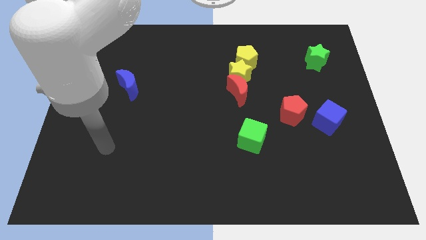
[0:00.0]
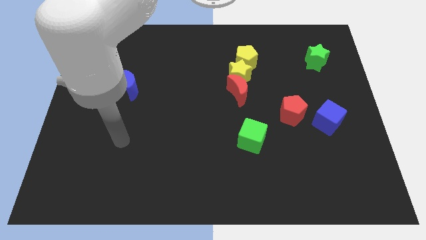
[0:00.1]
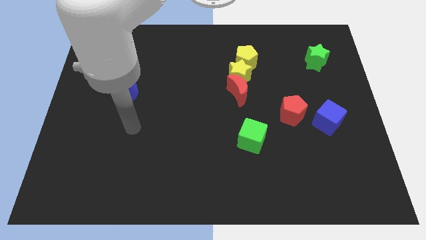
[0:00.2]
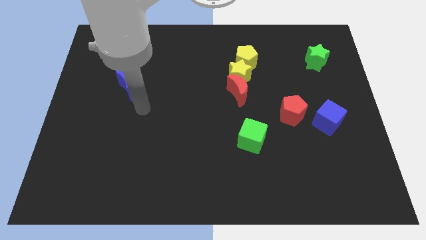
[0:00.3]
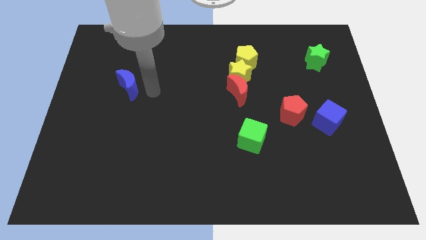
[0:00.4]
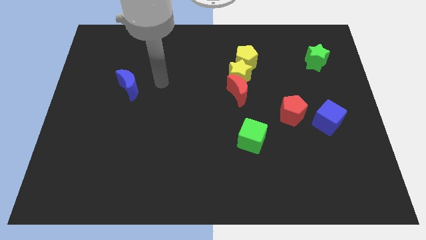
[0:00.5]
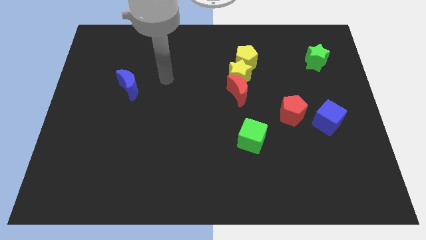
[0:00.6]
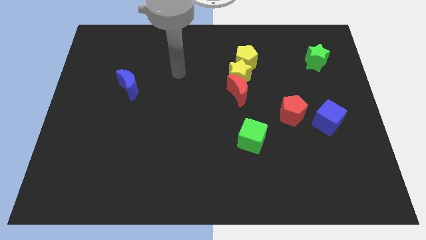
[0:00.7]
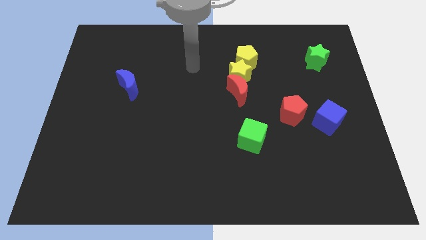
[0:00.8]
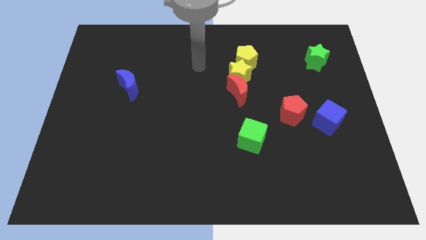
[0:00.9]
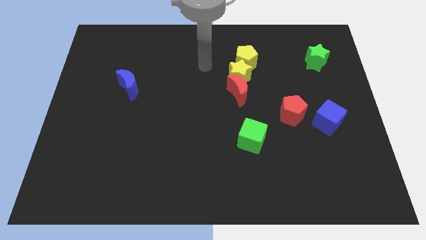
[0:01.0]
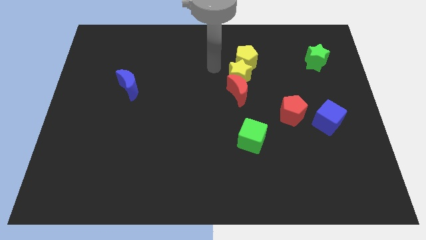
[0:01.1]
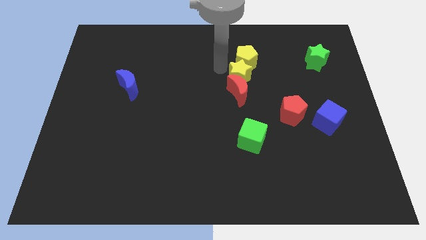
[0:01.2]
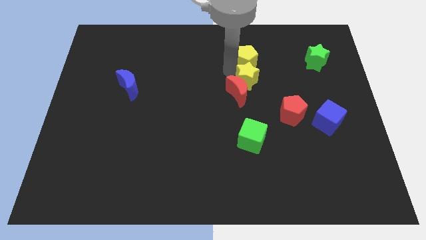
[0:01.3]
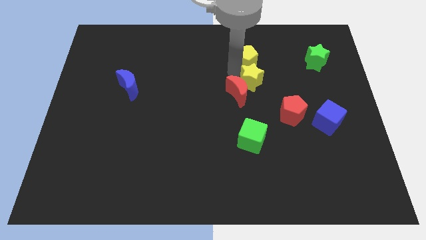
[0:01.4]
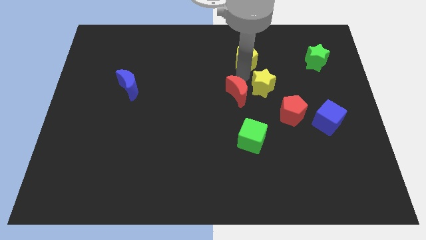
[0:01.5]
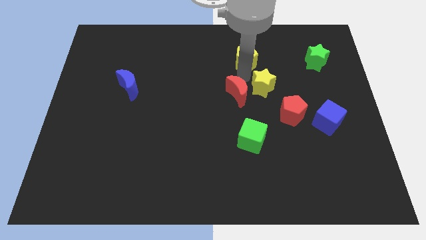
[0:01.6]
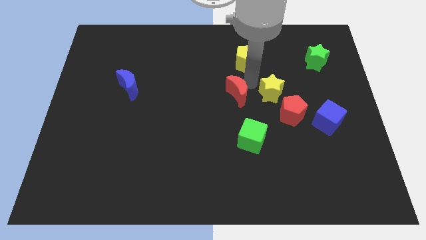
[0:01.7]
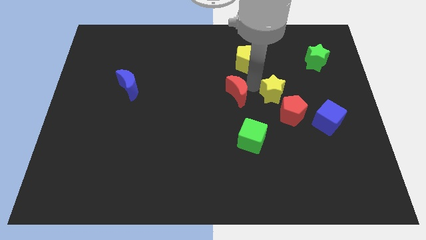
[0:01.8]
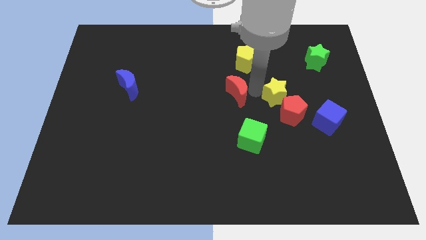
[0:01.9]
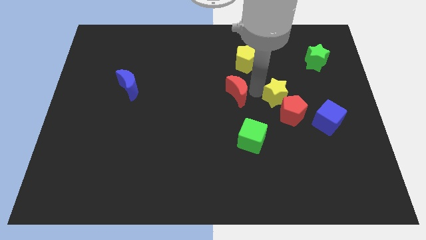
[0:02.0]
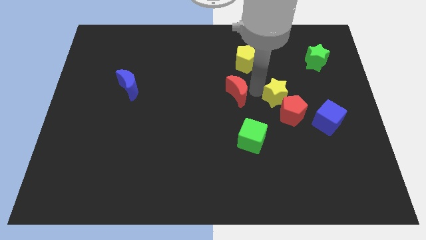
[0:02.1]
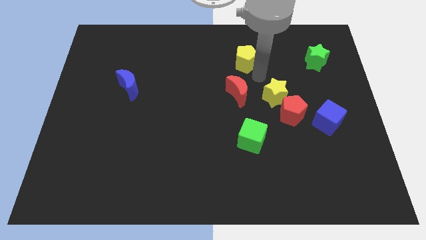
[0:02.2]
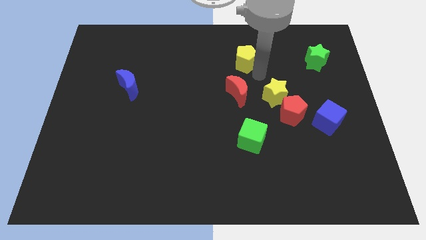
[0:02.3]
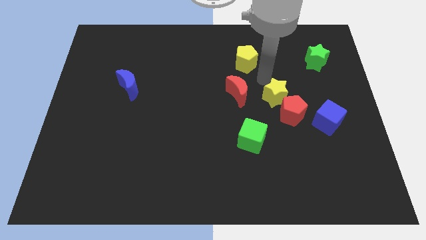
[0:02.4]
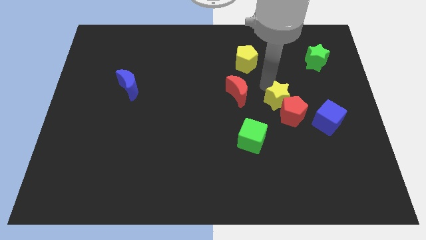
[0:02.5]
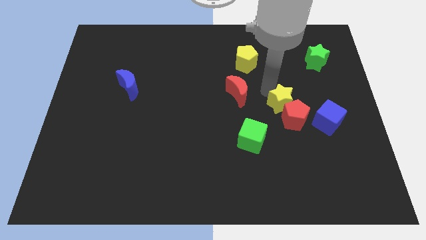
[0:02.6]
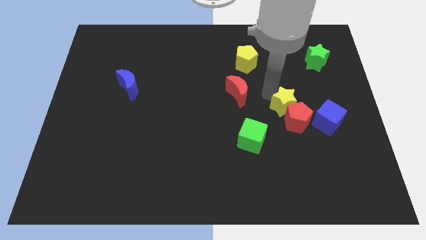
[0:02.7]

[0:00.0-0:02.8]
put the yellow star to the red pentagon

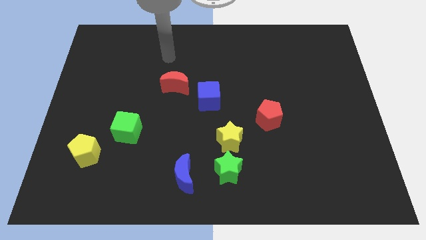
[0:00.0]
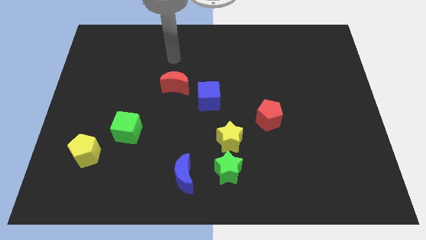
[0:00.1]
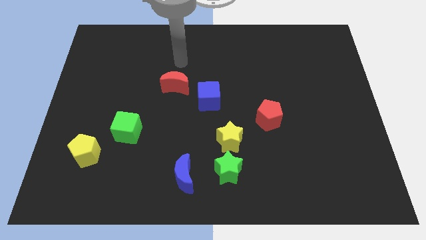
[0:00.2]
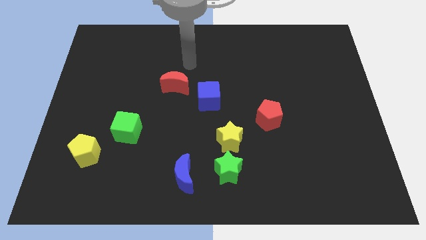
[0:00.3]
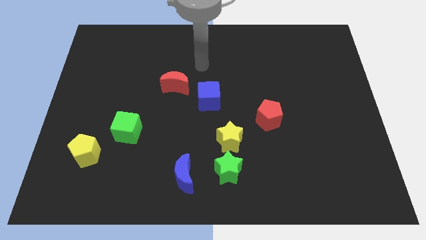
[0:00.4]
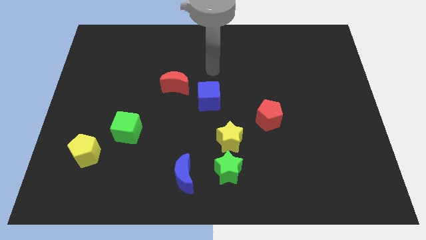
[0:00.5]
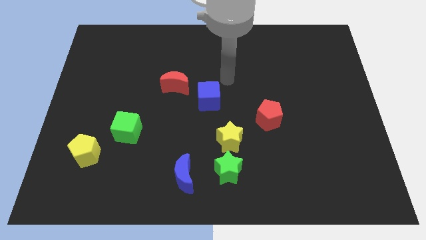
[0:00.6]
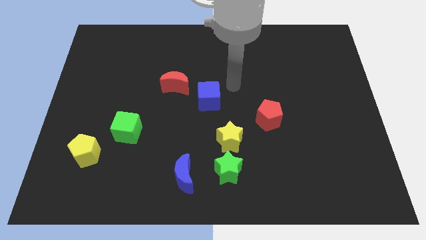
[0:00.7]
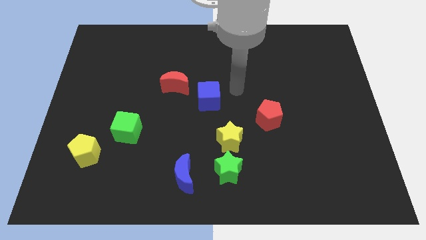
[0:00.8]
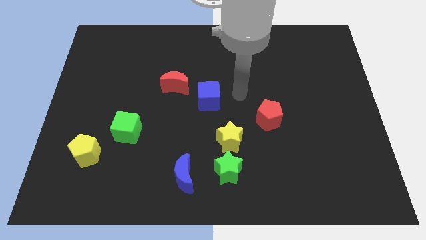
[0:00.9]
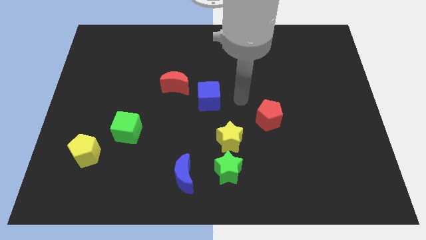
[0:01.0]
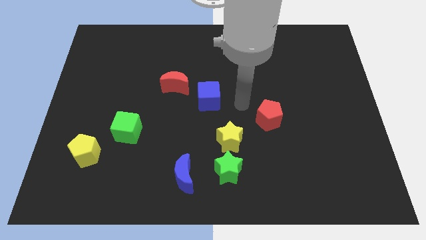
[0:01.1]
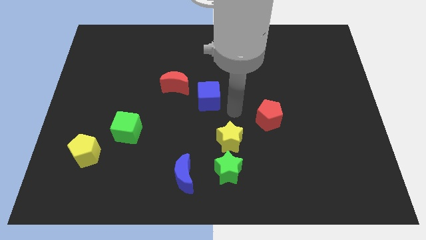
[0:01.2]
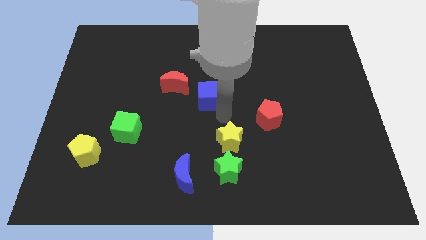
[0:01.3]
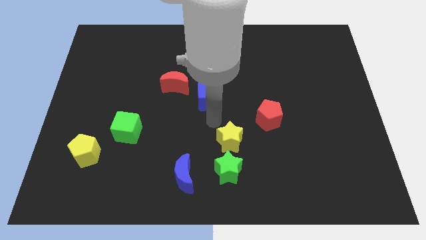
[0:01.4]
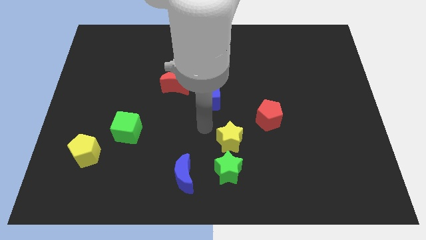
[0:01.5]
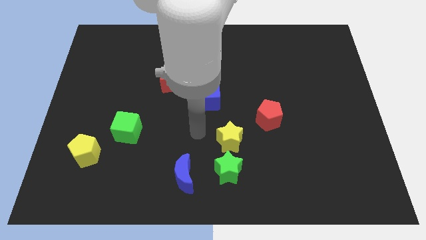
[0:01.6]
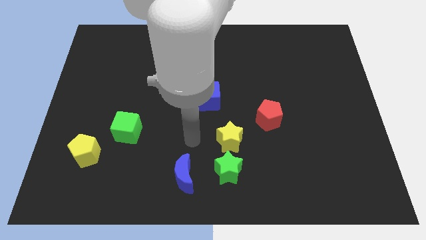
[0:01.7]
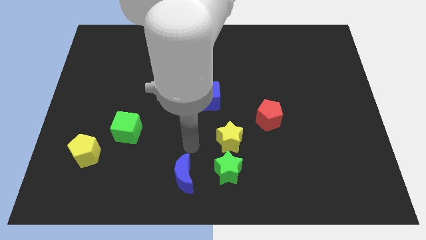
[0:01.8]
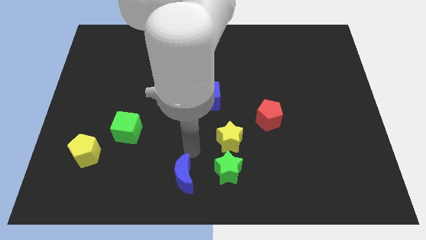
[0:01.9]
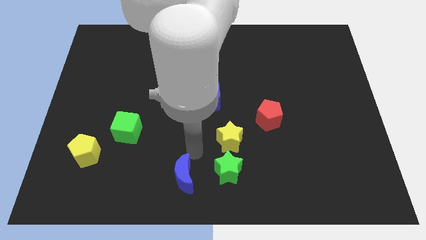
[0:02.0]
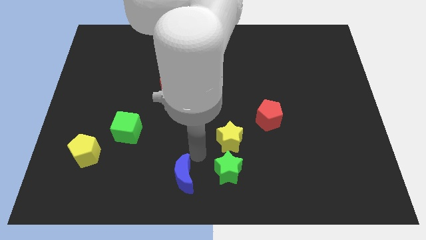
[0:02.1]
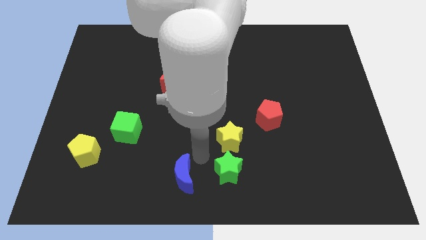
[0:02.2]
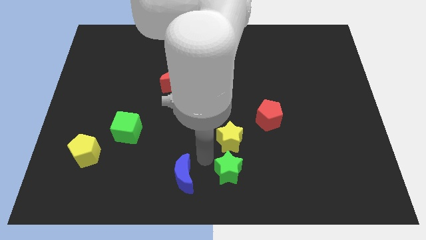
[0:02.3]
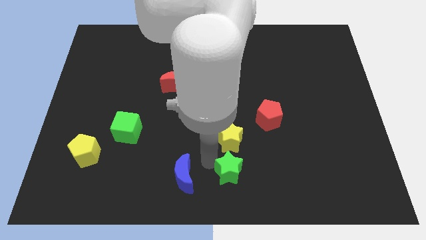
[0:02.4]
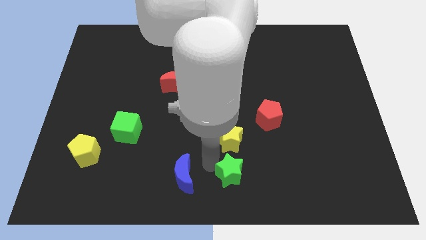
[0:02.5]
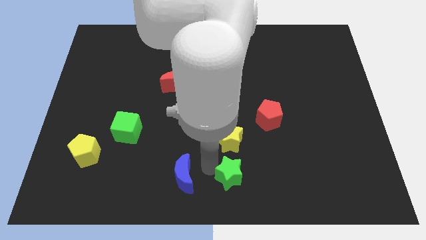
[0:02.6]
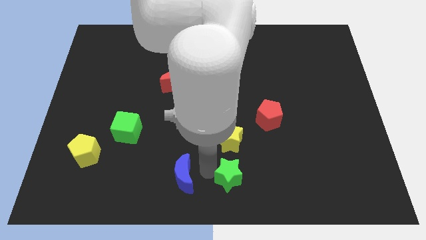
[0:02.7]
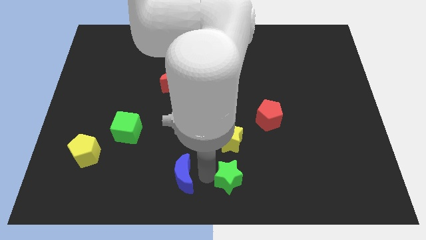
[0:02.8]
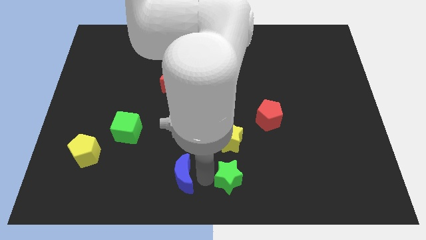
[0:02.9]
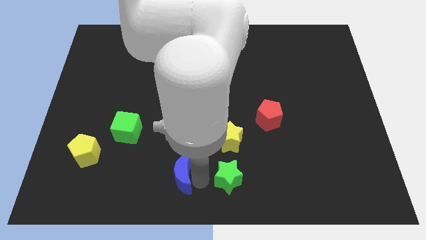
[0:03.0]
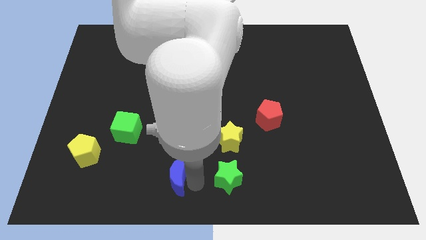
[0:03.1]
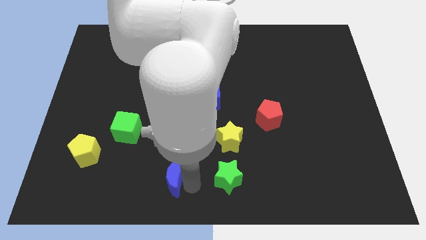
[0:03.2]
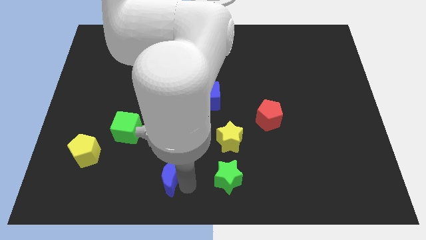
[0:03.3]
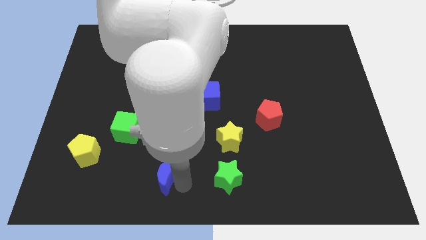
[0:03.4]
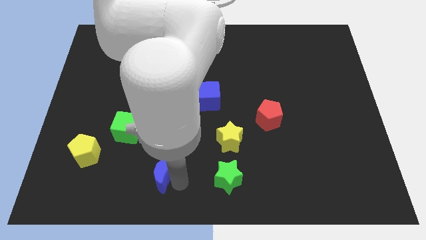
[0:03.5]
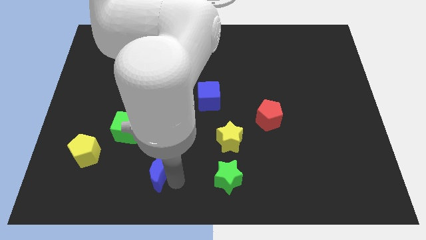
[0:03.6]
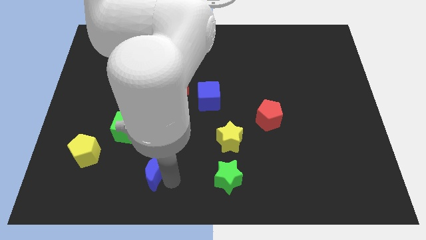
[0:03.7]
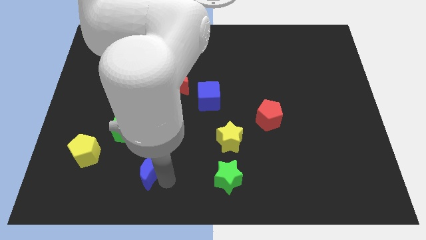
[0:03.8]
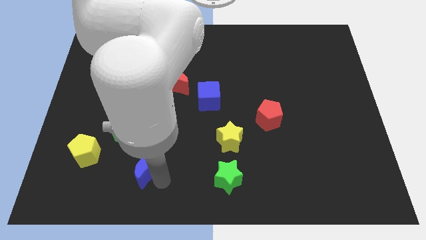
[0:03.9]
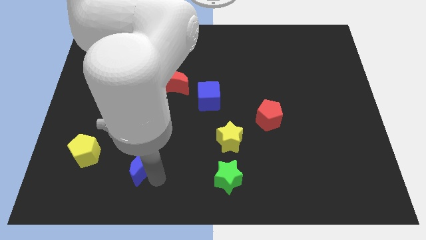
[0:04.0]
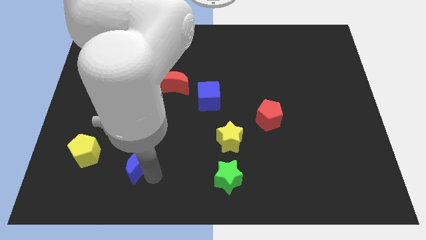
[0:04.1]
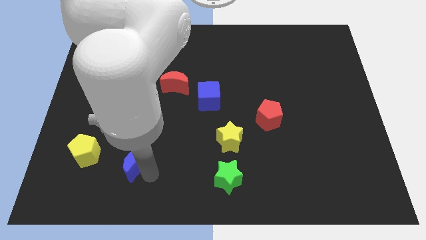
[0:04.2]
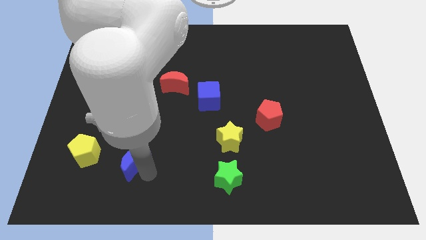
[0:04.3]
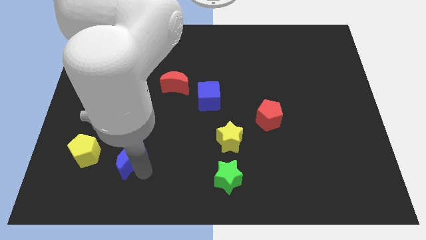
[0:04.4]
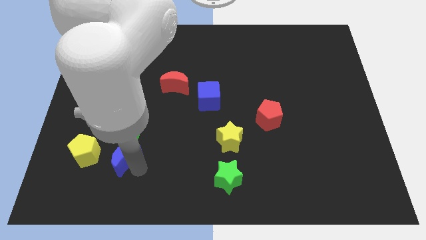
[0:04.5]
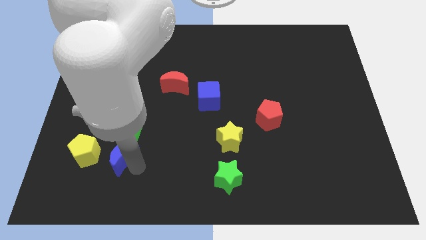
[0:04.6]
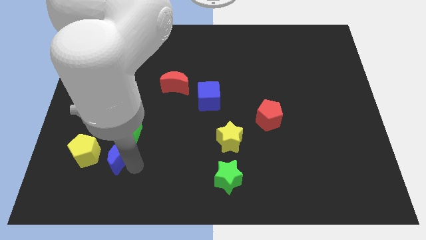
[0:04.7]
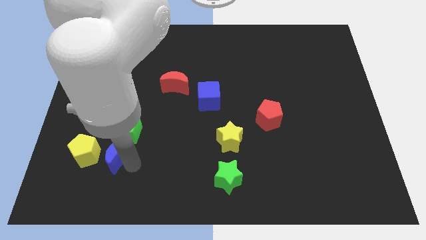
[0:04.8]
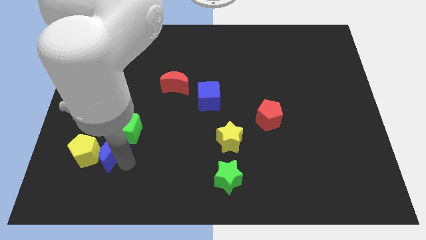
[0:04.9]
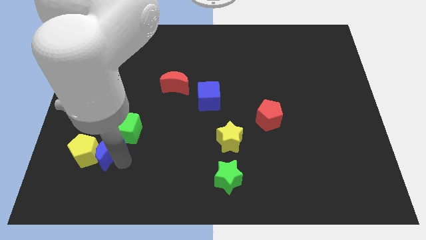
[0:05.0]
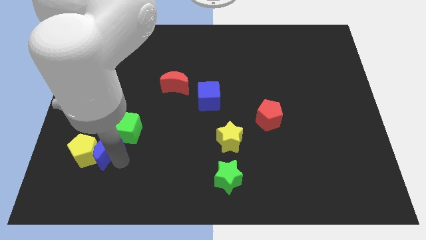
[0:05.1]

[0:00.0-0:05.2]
move the blue moon to the yellow pentagon

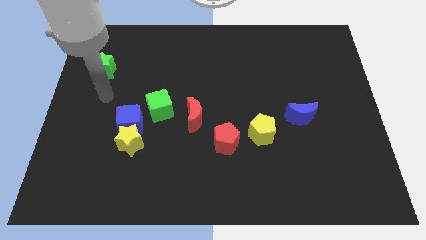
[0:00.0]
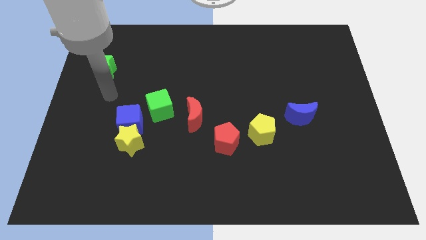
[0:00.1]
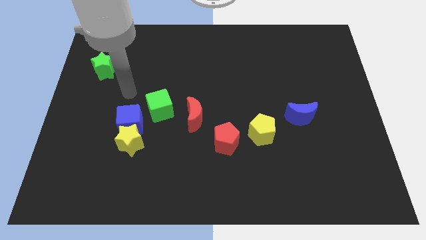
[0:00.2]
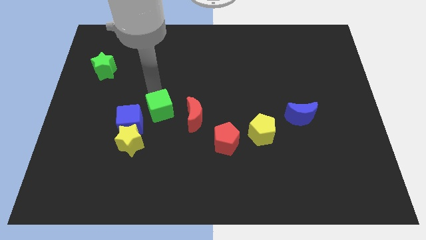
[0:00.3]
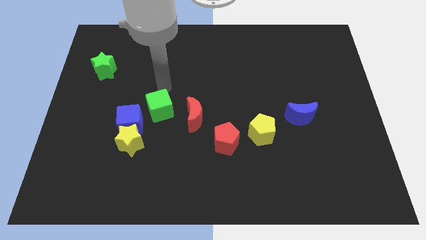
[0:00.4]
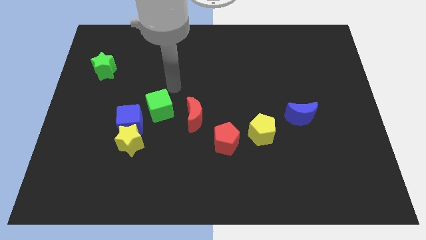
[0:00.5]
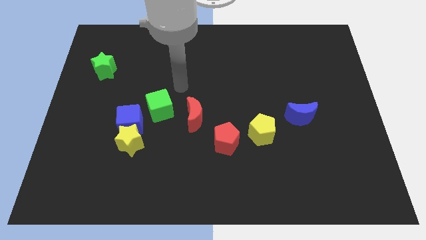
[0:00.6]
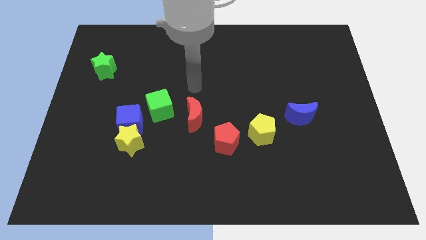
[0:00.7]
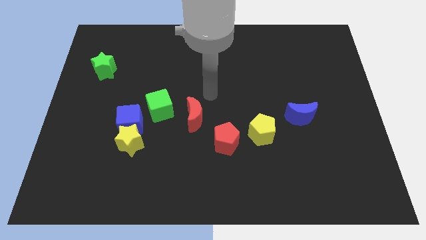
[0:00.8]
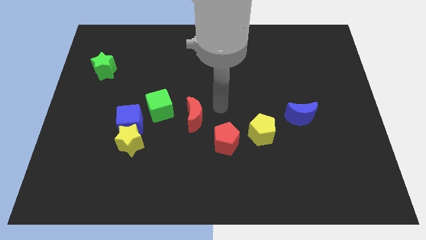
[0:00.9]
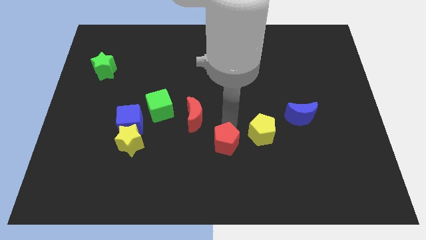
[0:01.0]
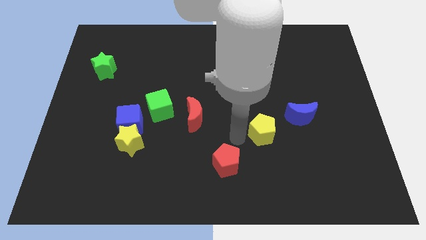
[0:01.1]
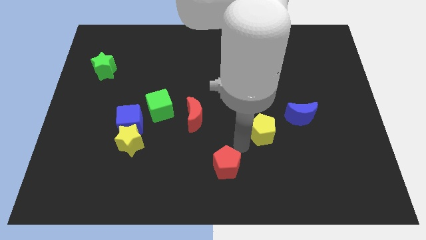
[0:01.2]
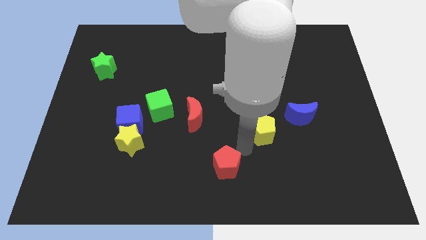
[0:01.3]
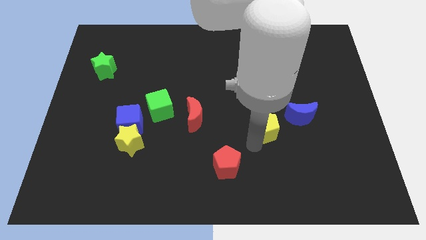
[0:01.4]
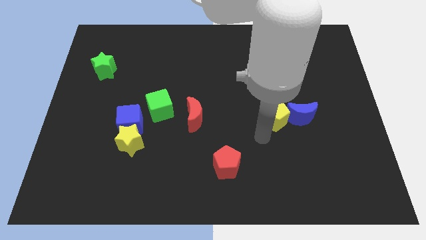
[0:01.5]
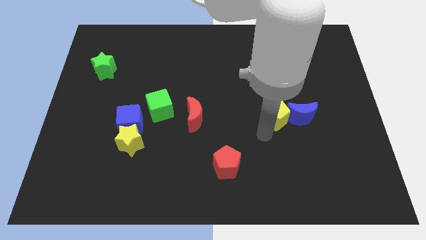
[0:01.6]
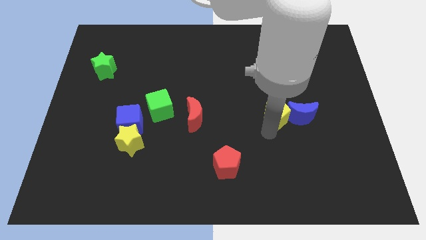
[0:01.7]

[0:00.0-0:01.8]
push the yellow pentagon next to the blue moon
